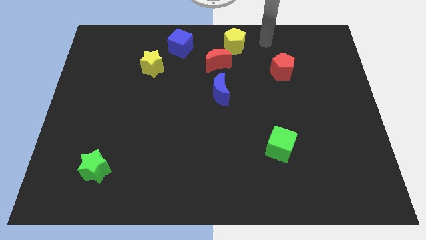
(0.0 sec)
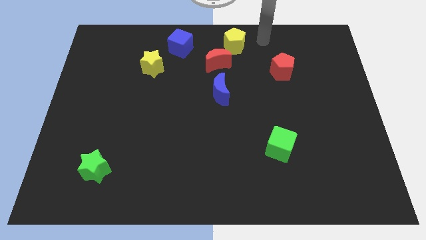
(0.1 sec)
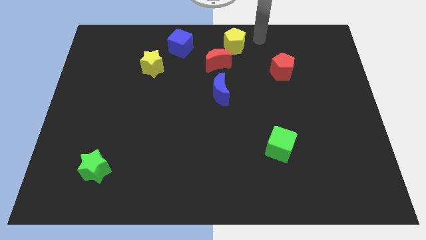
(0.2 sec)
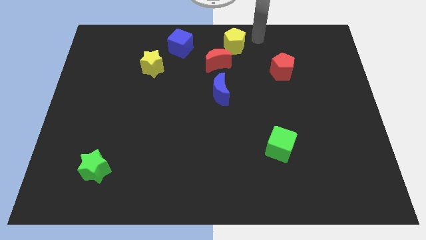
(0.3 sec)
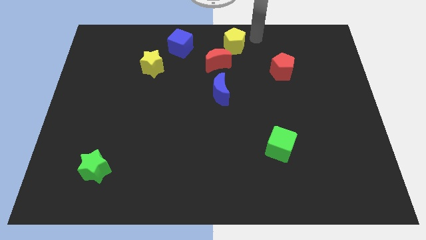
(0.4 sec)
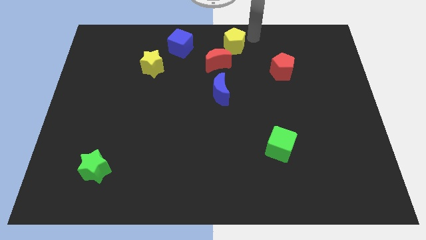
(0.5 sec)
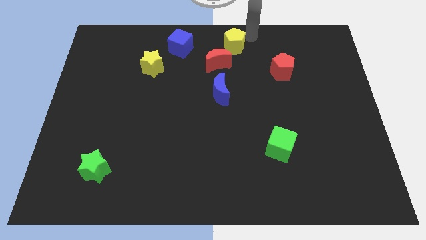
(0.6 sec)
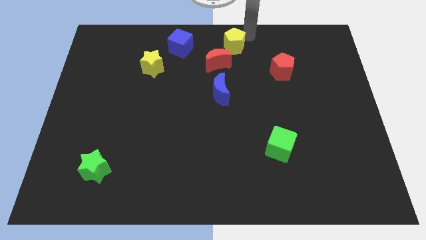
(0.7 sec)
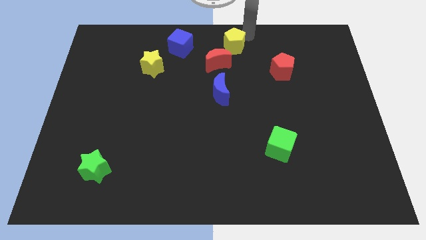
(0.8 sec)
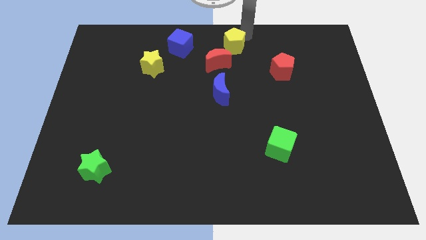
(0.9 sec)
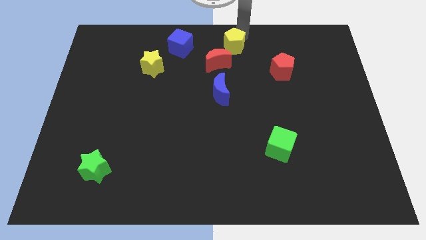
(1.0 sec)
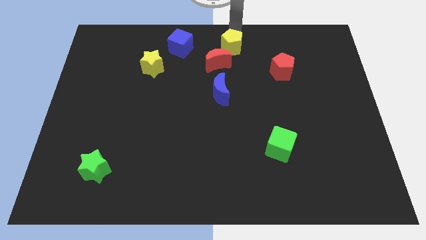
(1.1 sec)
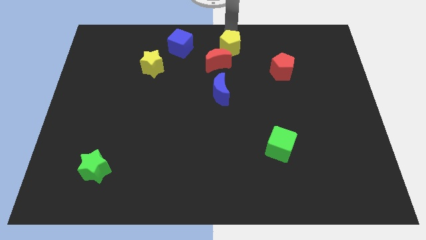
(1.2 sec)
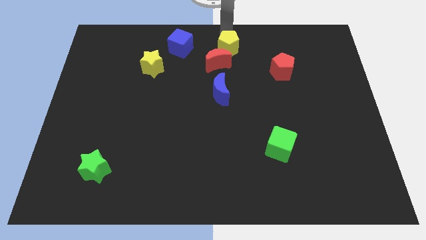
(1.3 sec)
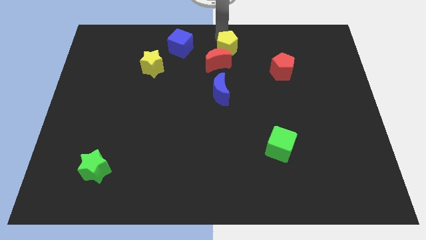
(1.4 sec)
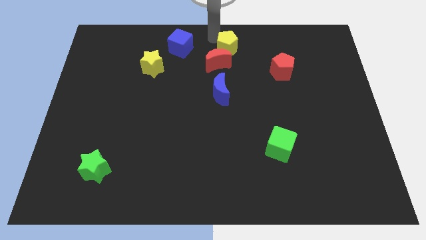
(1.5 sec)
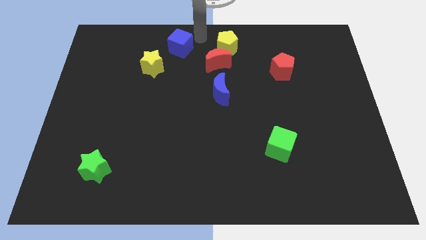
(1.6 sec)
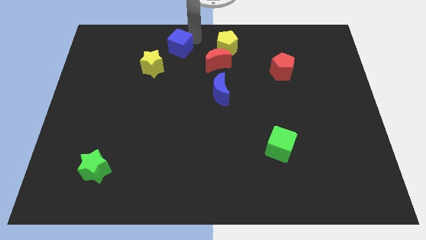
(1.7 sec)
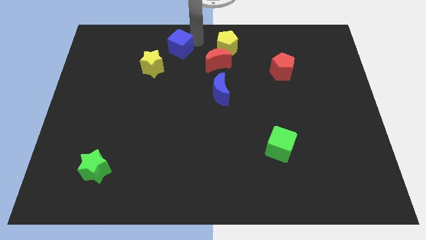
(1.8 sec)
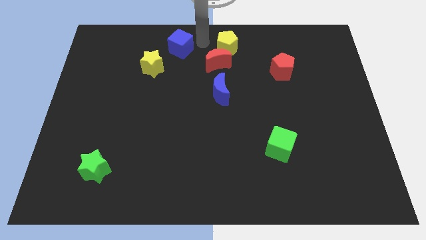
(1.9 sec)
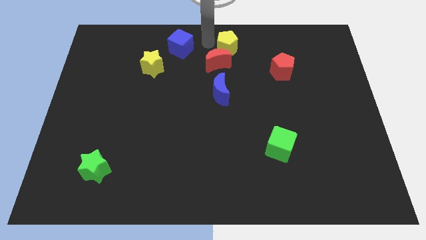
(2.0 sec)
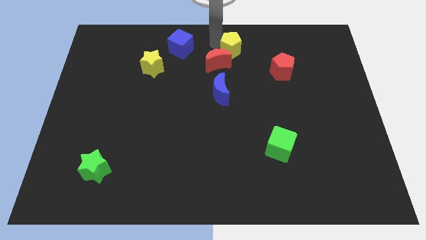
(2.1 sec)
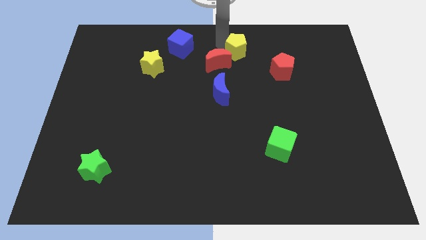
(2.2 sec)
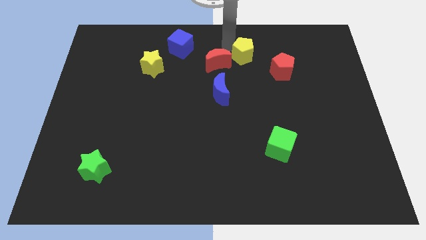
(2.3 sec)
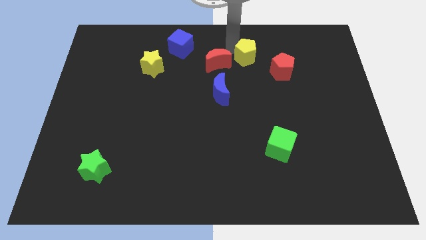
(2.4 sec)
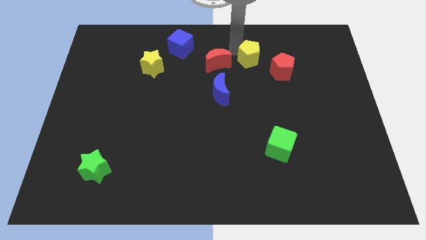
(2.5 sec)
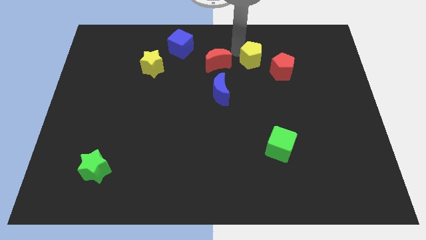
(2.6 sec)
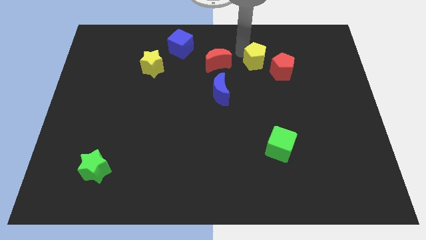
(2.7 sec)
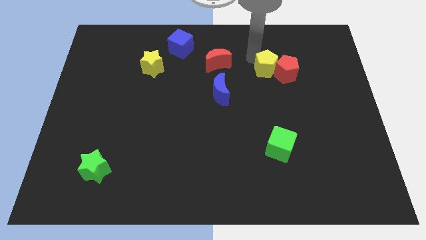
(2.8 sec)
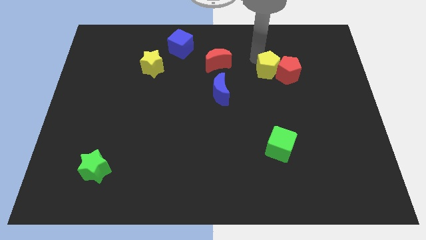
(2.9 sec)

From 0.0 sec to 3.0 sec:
push yellow pentagon vertically above green cube

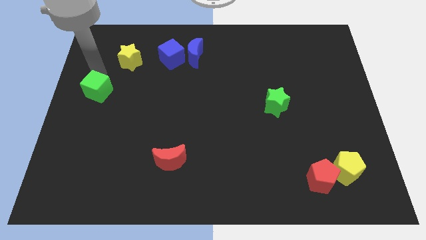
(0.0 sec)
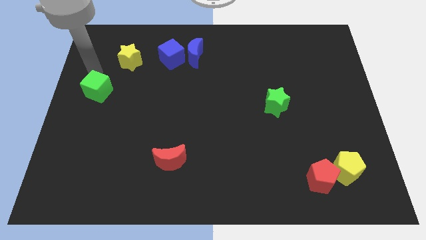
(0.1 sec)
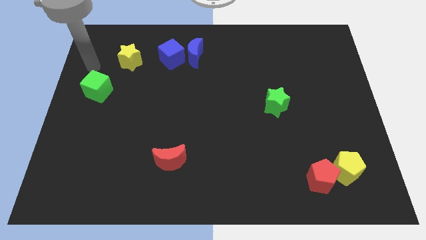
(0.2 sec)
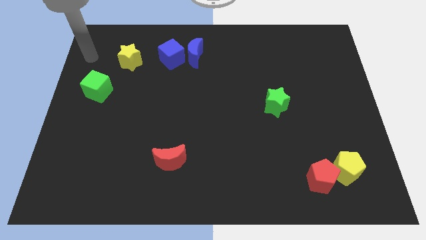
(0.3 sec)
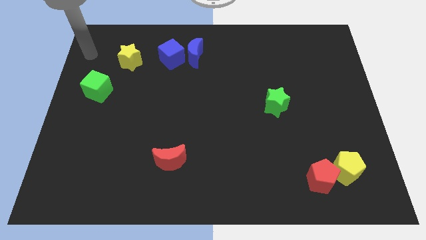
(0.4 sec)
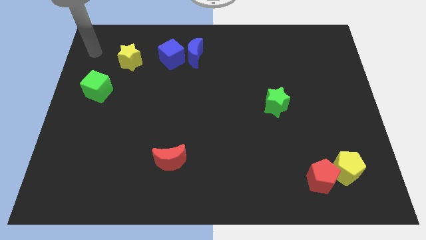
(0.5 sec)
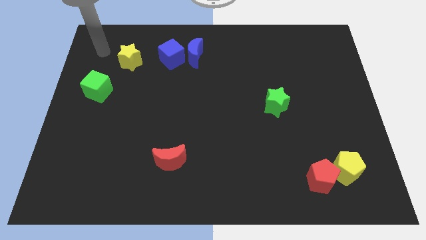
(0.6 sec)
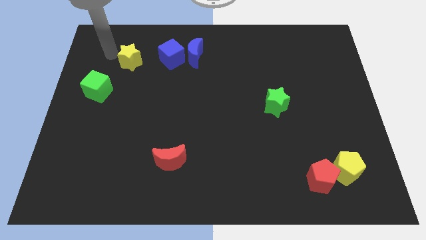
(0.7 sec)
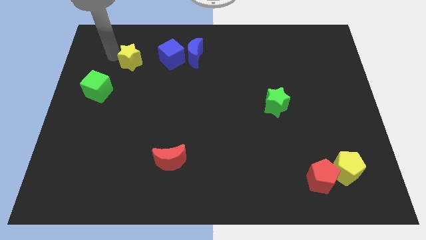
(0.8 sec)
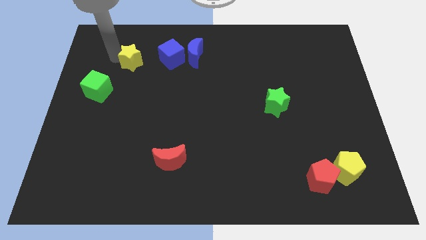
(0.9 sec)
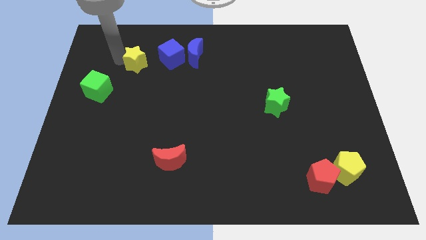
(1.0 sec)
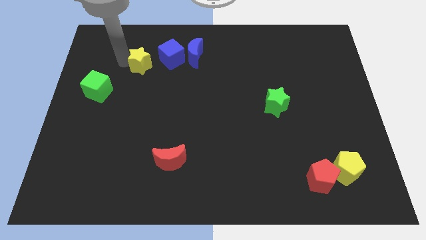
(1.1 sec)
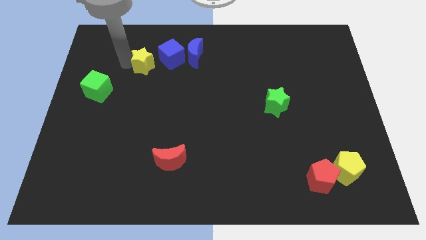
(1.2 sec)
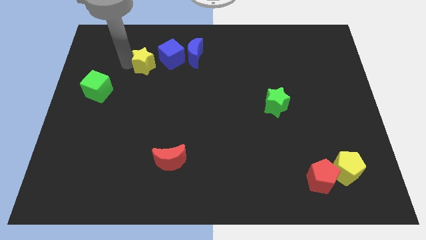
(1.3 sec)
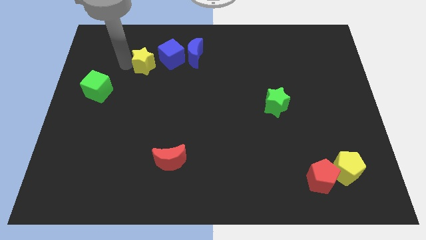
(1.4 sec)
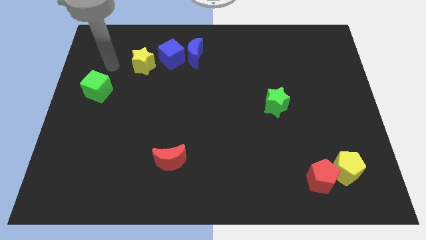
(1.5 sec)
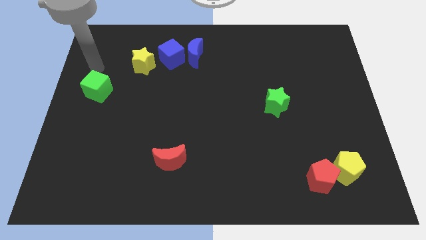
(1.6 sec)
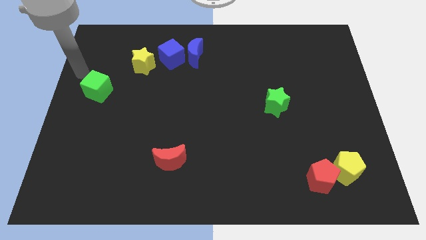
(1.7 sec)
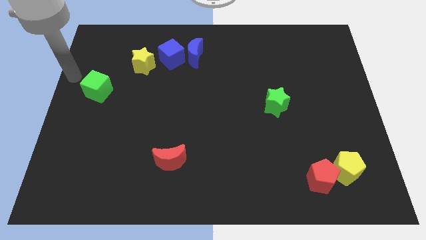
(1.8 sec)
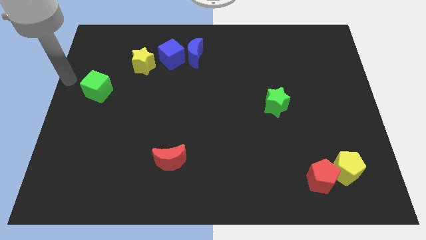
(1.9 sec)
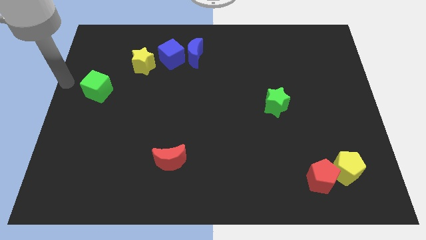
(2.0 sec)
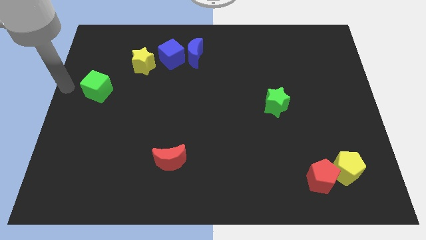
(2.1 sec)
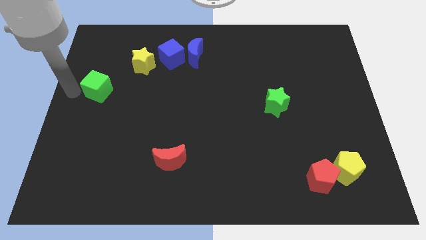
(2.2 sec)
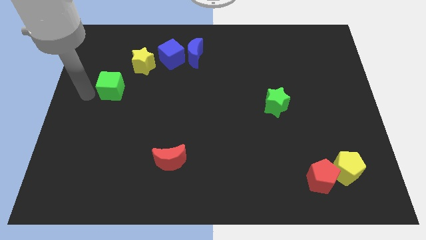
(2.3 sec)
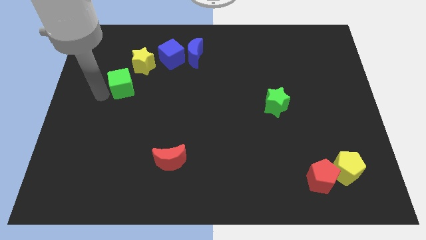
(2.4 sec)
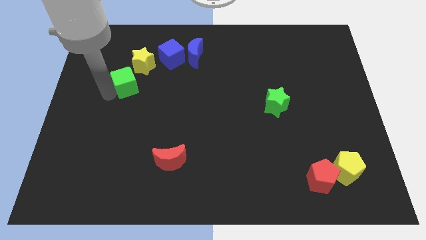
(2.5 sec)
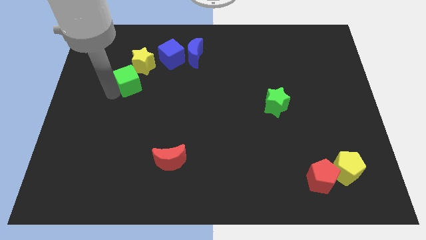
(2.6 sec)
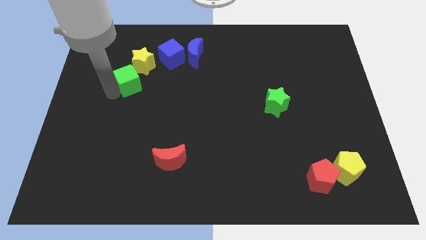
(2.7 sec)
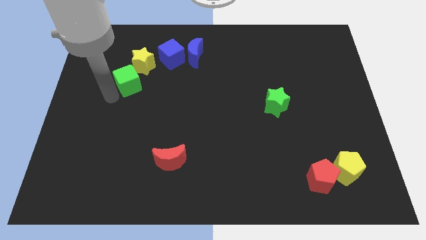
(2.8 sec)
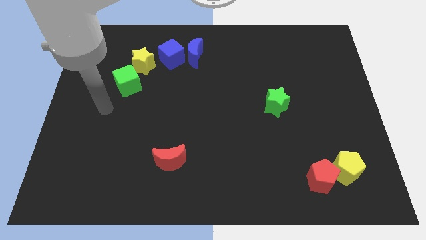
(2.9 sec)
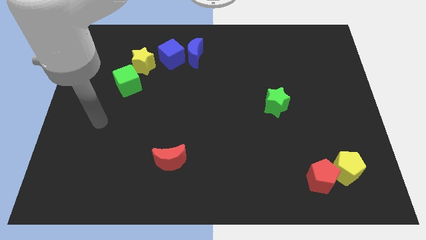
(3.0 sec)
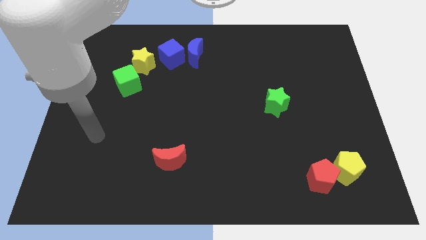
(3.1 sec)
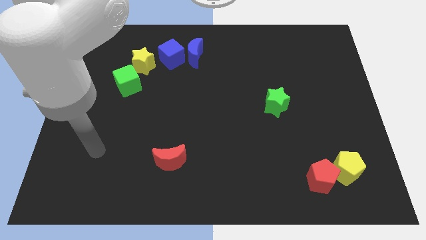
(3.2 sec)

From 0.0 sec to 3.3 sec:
move the yellow star and the green cube slightly to the right

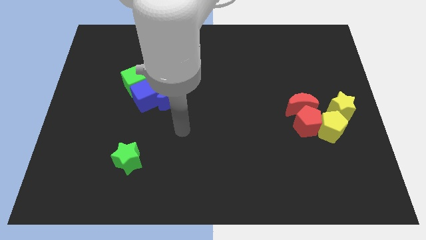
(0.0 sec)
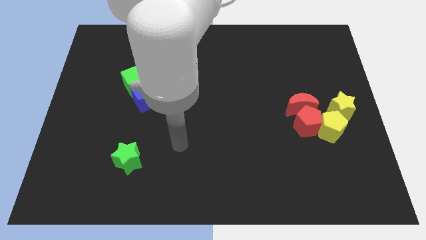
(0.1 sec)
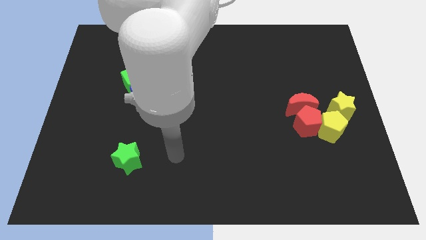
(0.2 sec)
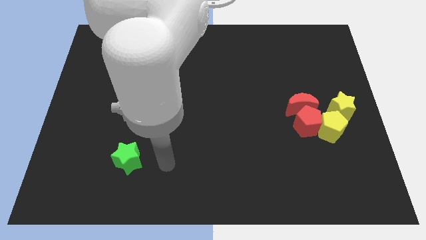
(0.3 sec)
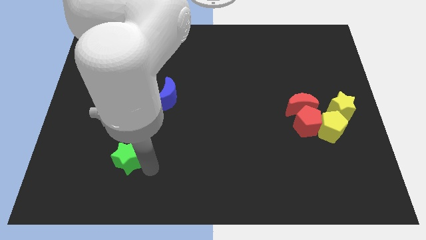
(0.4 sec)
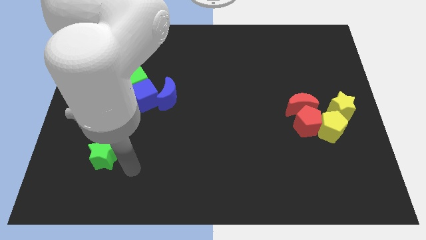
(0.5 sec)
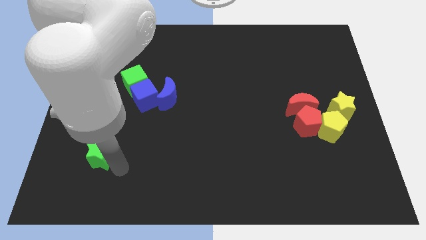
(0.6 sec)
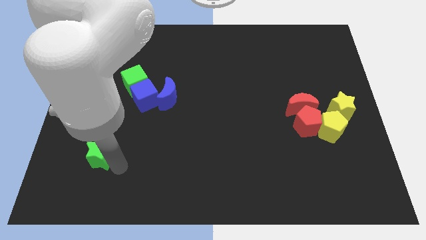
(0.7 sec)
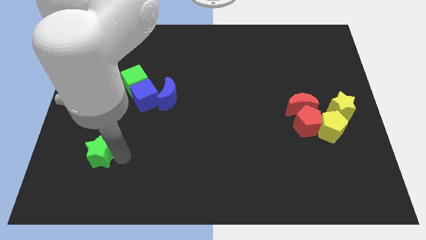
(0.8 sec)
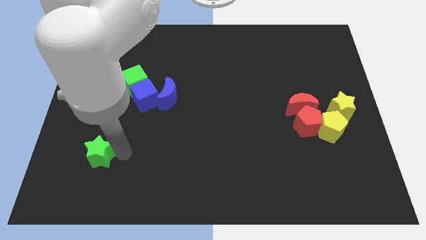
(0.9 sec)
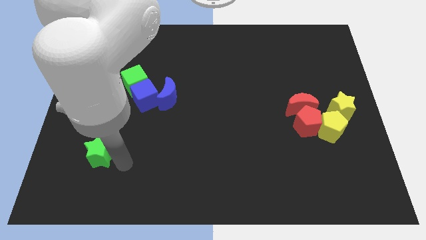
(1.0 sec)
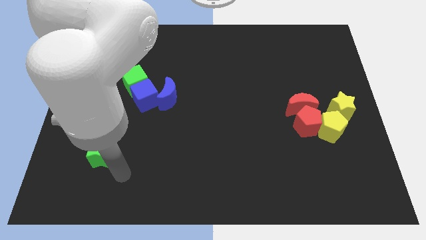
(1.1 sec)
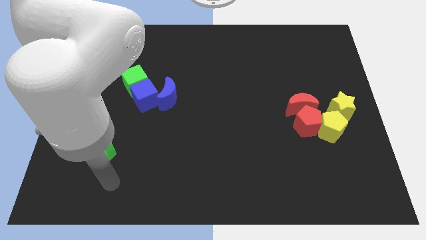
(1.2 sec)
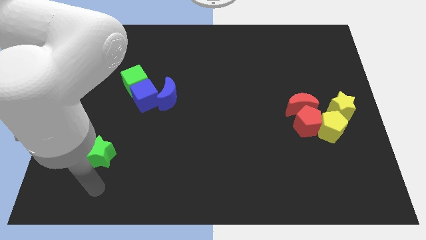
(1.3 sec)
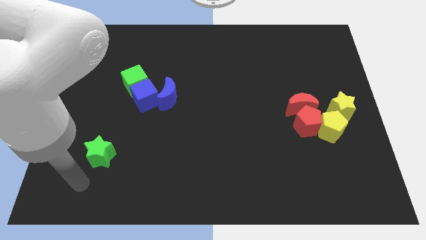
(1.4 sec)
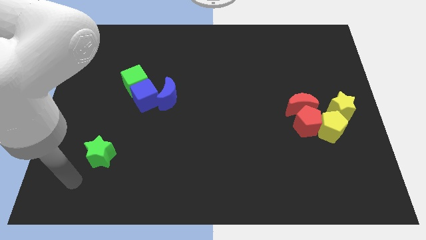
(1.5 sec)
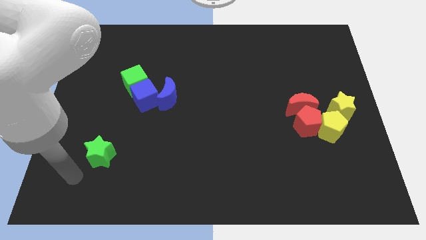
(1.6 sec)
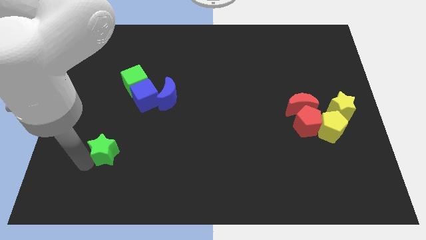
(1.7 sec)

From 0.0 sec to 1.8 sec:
move the green star to the left center of the board

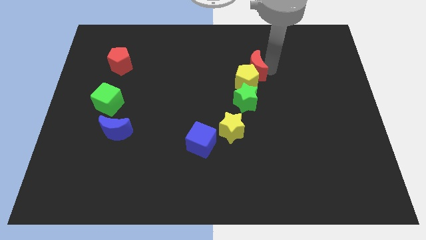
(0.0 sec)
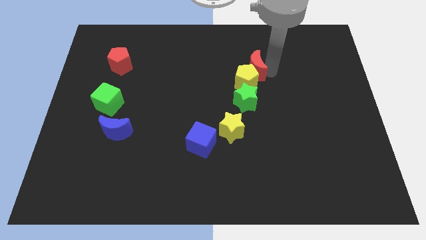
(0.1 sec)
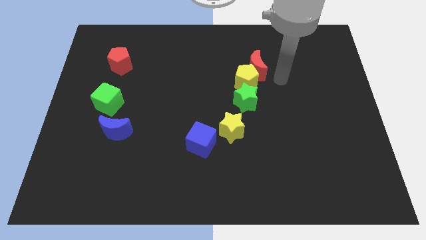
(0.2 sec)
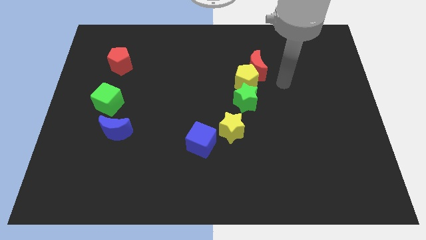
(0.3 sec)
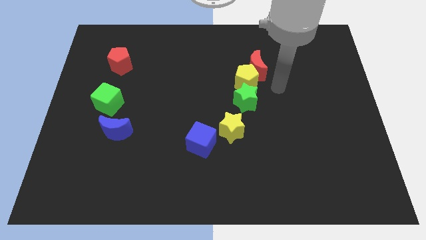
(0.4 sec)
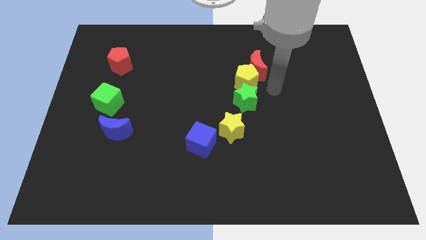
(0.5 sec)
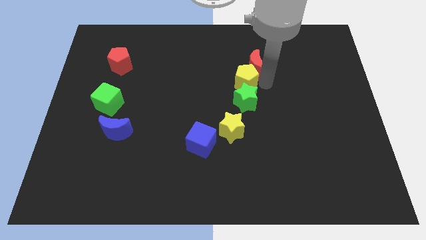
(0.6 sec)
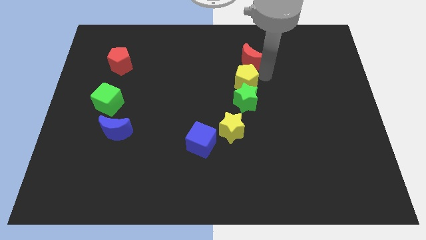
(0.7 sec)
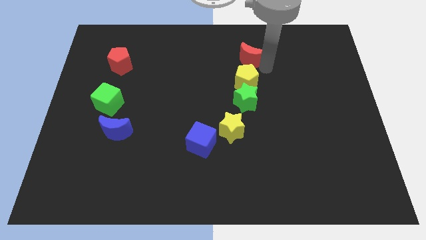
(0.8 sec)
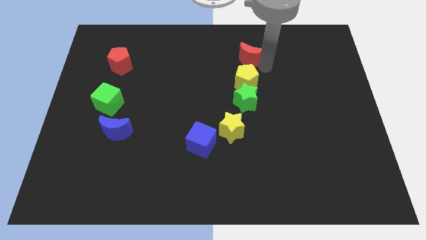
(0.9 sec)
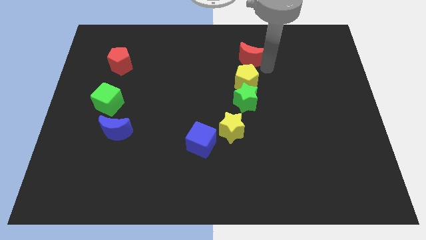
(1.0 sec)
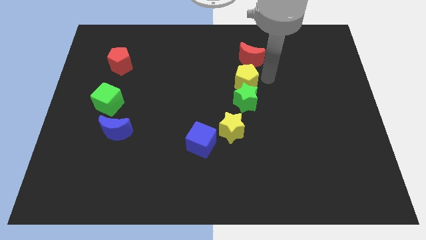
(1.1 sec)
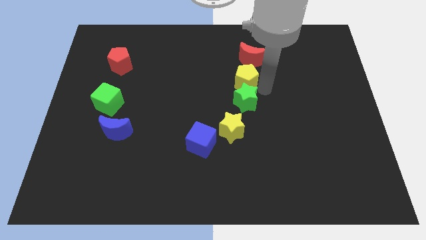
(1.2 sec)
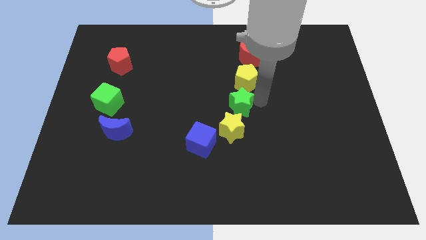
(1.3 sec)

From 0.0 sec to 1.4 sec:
place the red crescent at the top of yellow pentagon
